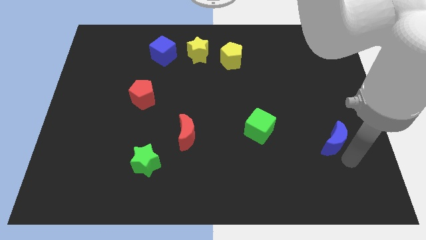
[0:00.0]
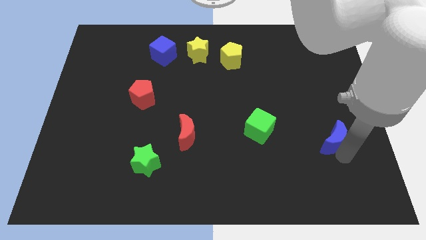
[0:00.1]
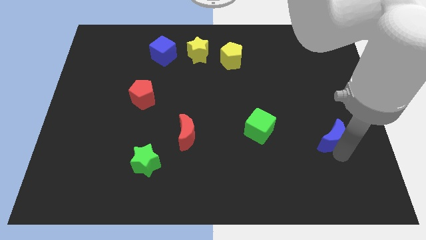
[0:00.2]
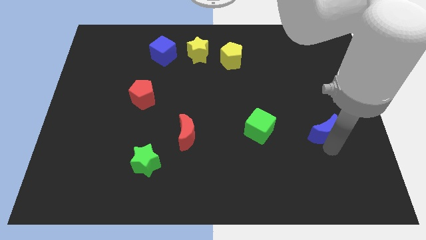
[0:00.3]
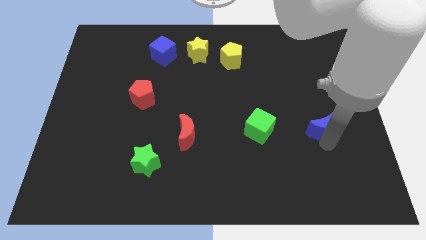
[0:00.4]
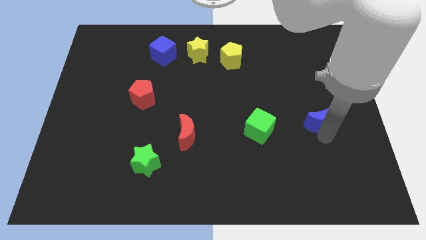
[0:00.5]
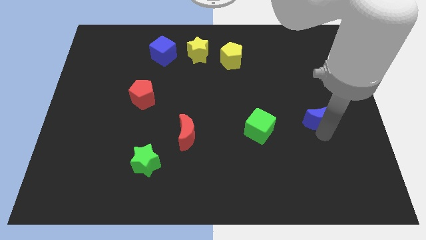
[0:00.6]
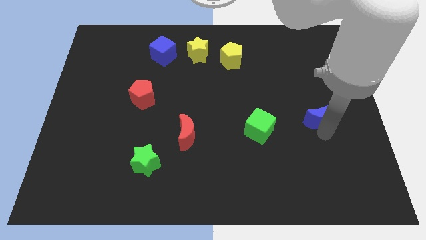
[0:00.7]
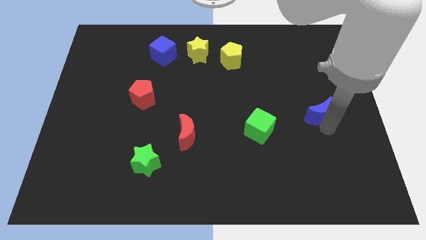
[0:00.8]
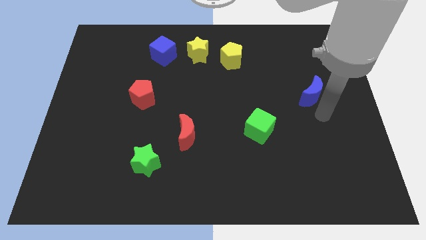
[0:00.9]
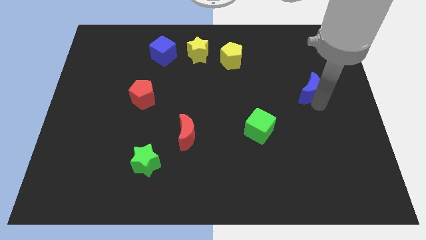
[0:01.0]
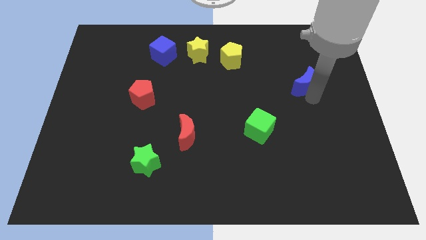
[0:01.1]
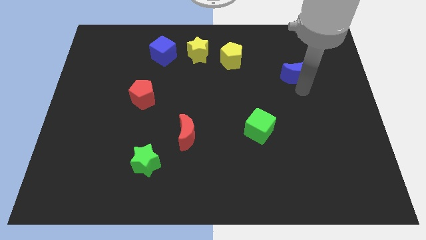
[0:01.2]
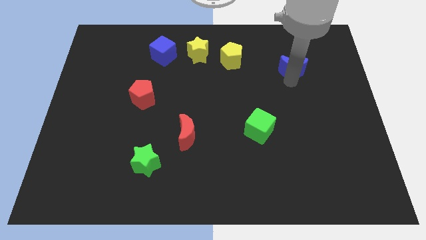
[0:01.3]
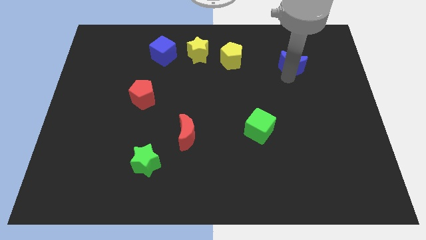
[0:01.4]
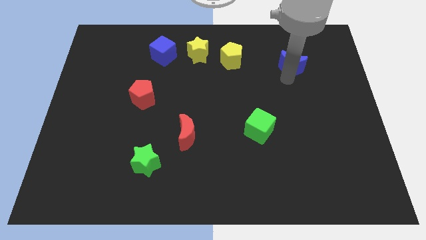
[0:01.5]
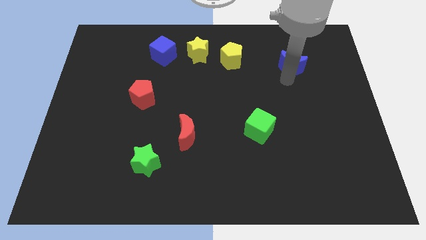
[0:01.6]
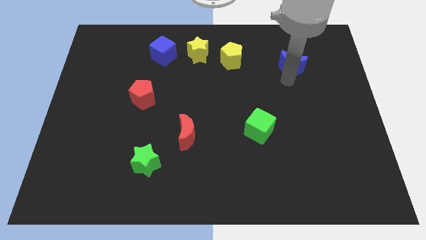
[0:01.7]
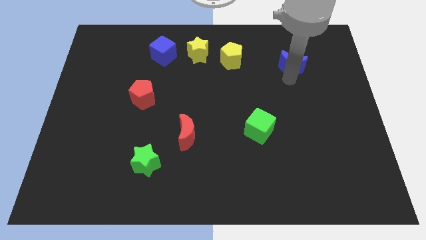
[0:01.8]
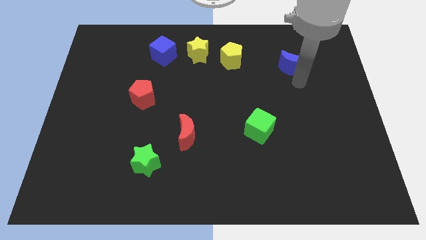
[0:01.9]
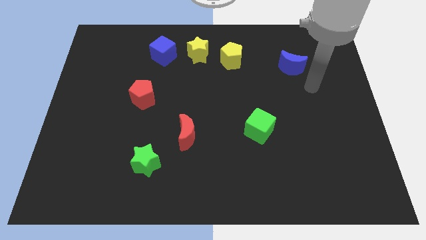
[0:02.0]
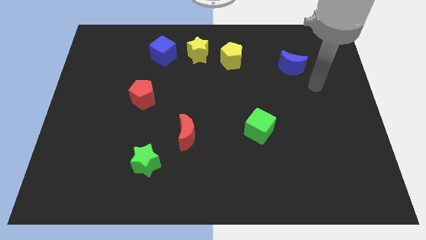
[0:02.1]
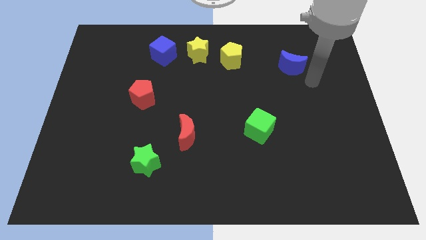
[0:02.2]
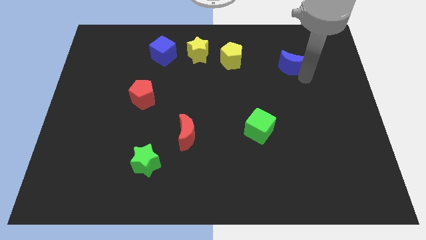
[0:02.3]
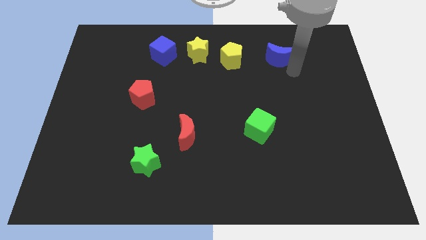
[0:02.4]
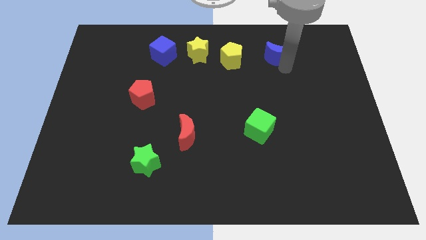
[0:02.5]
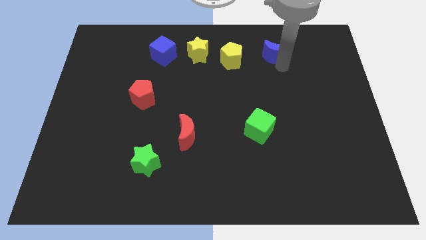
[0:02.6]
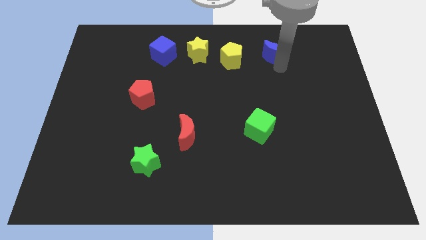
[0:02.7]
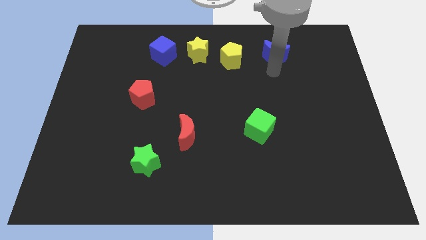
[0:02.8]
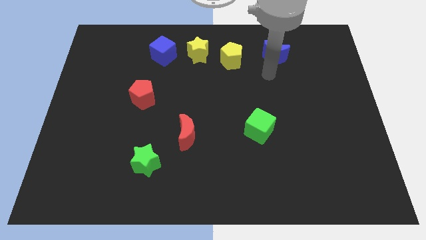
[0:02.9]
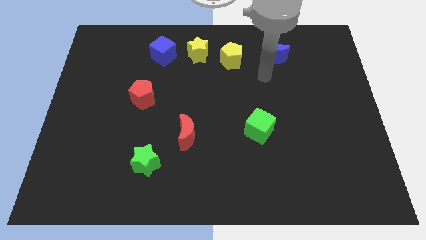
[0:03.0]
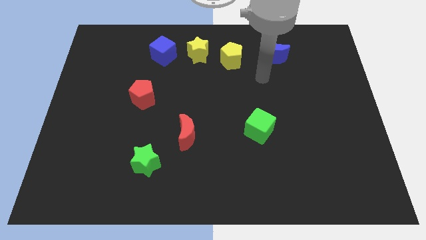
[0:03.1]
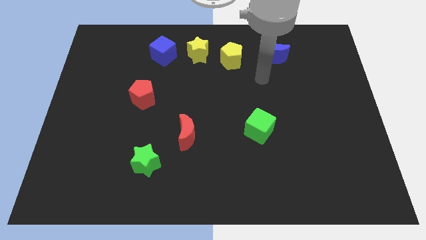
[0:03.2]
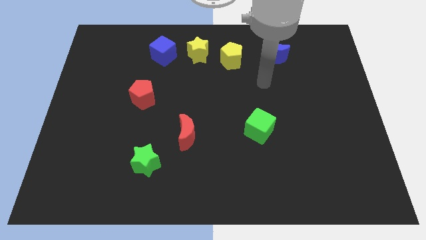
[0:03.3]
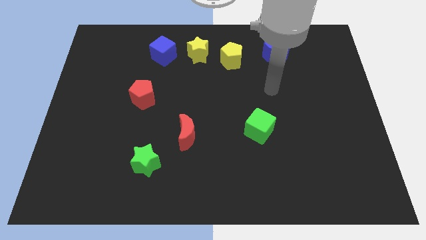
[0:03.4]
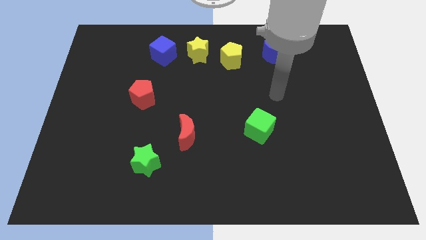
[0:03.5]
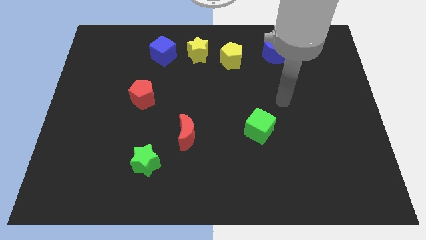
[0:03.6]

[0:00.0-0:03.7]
move the blue crescent to right of the yellow pentagon

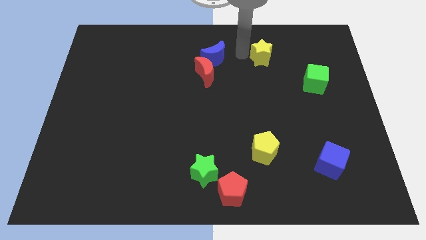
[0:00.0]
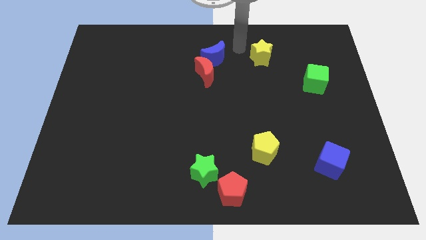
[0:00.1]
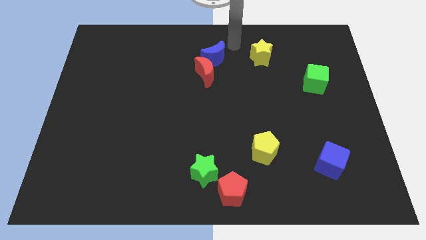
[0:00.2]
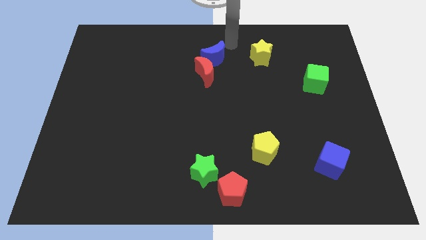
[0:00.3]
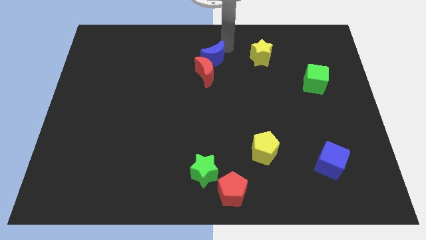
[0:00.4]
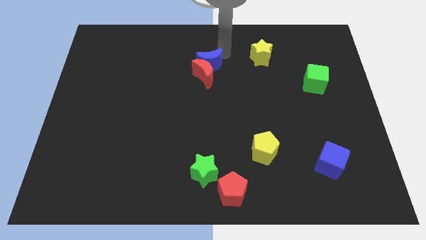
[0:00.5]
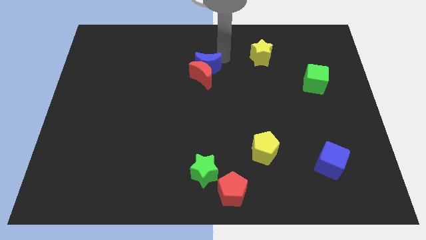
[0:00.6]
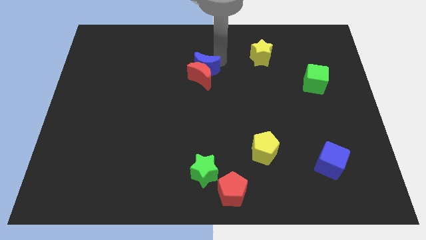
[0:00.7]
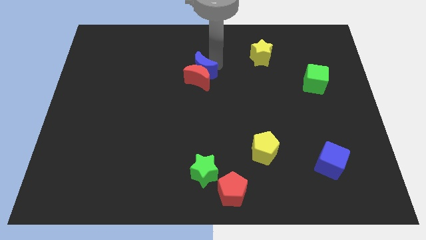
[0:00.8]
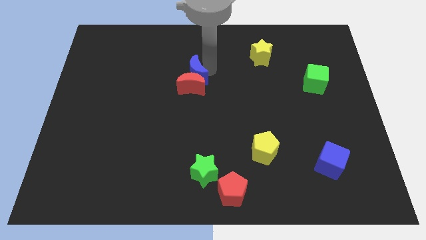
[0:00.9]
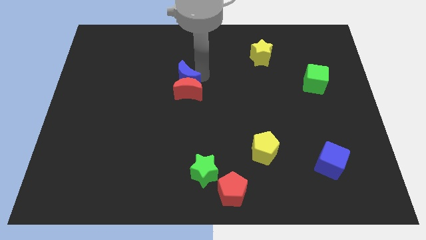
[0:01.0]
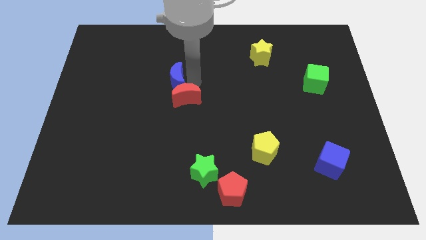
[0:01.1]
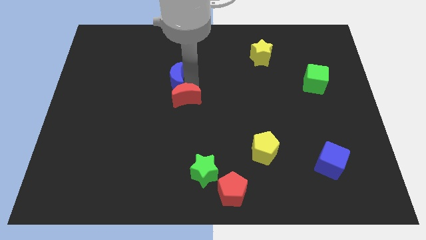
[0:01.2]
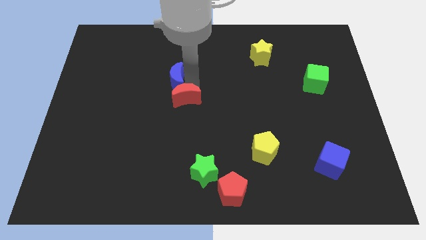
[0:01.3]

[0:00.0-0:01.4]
move the blue crescent along with red crescent towards the center of the board

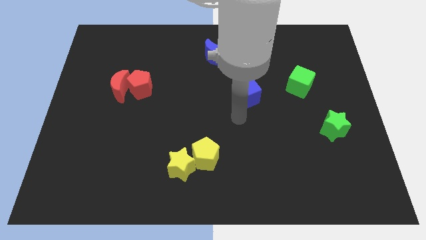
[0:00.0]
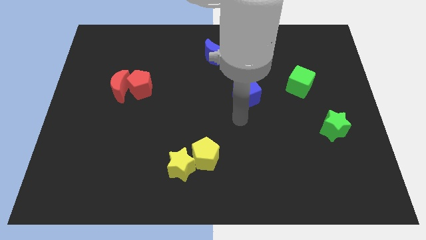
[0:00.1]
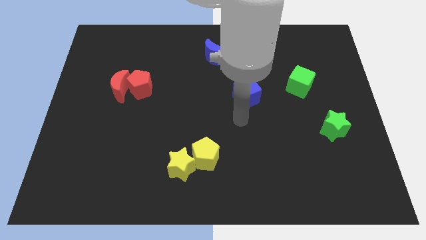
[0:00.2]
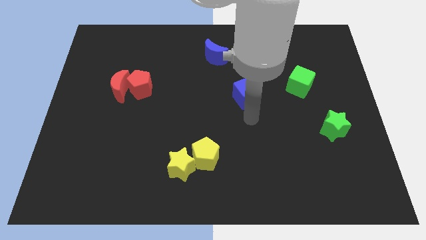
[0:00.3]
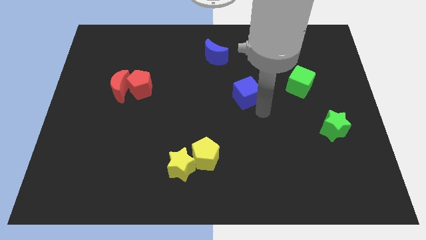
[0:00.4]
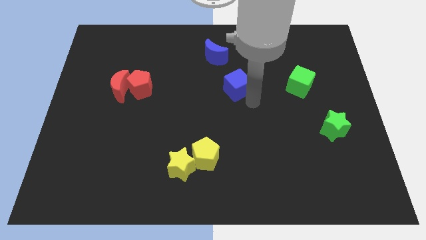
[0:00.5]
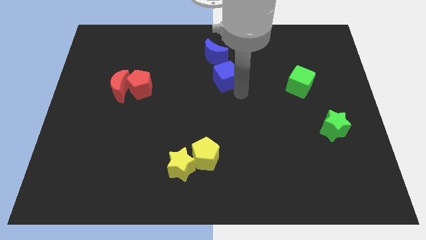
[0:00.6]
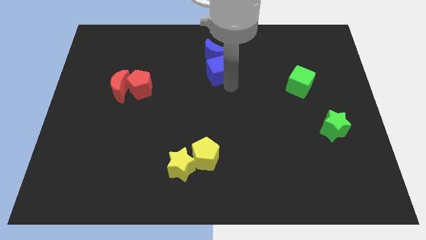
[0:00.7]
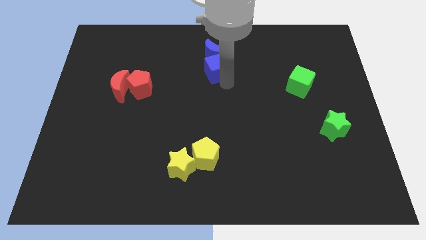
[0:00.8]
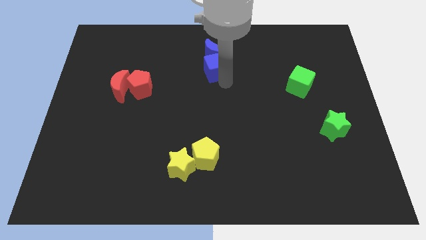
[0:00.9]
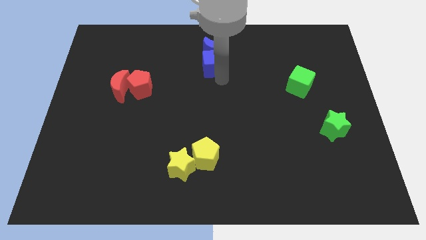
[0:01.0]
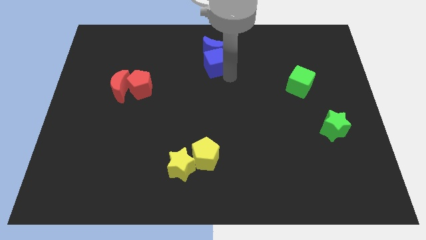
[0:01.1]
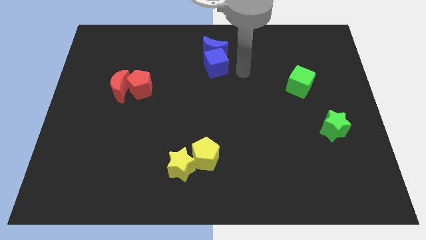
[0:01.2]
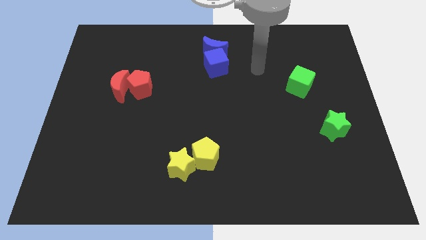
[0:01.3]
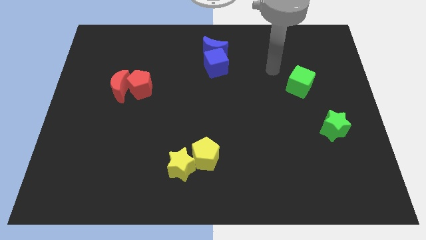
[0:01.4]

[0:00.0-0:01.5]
push the blue block into the blue crescent

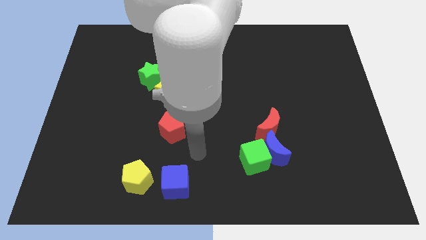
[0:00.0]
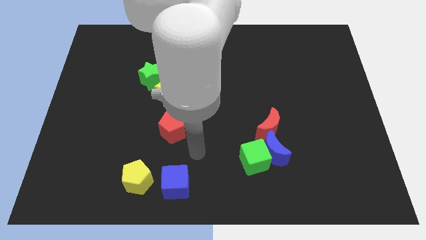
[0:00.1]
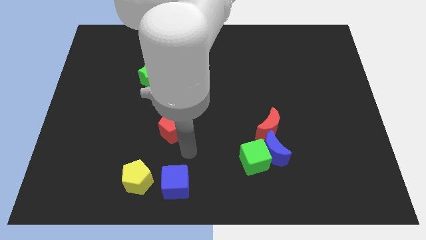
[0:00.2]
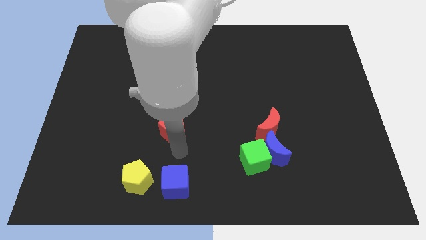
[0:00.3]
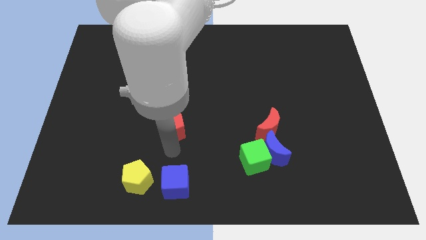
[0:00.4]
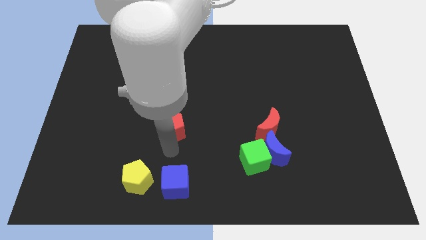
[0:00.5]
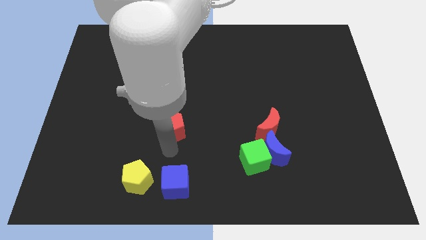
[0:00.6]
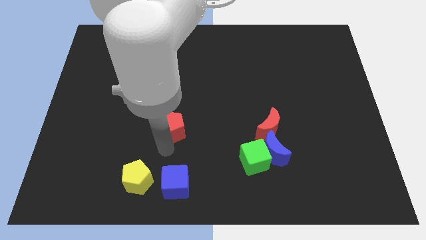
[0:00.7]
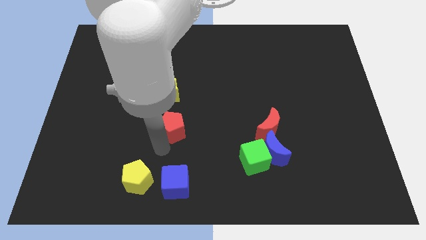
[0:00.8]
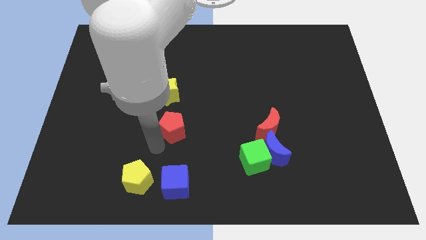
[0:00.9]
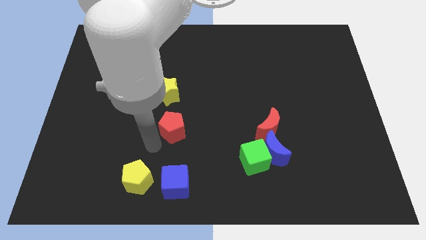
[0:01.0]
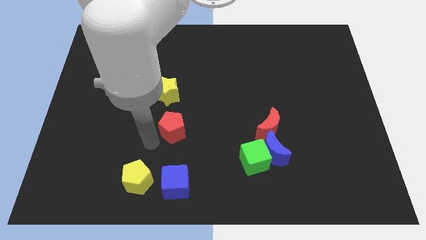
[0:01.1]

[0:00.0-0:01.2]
place the arm left side of the red pentagon

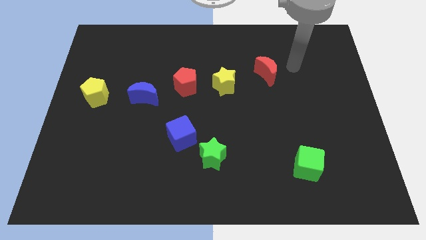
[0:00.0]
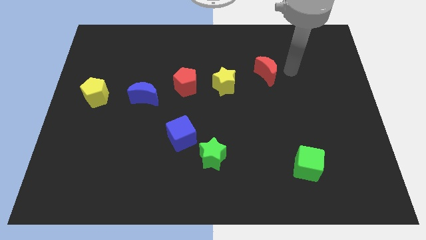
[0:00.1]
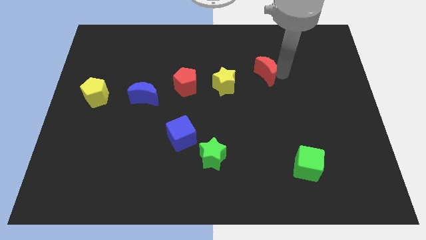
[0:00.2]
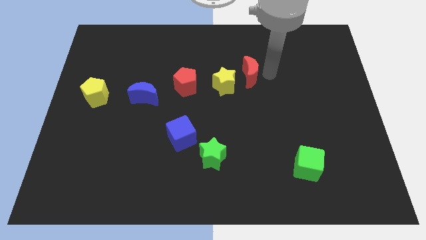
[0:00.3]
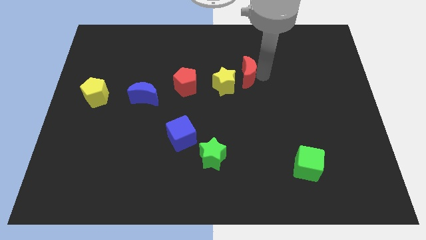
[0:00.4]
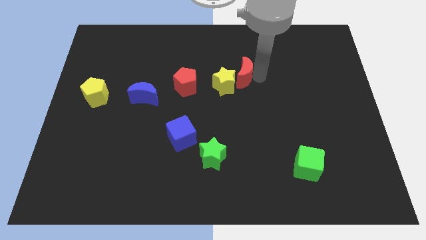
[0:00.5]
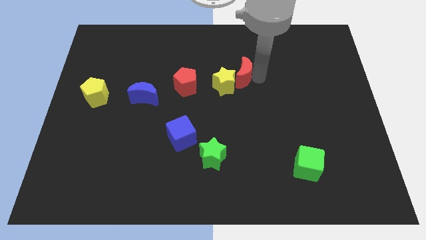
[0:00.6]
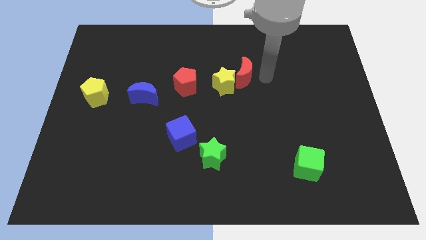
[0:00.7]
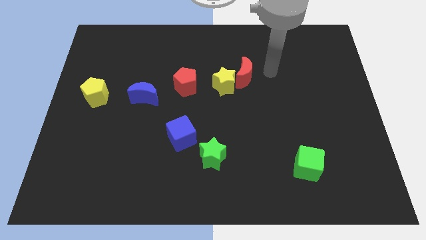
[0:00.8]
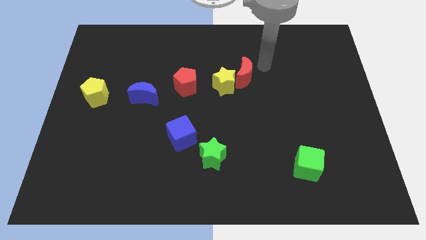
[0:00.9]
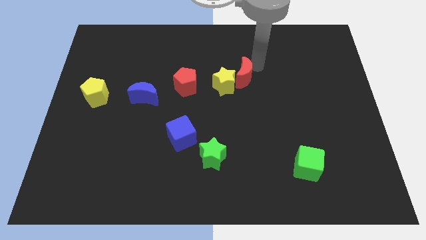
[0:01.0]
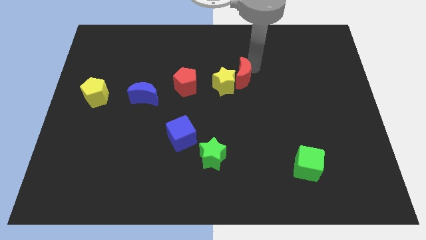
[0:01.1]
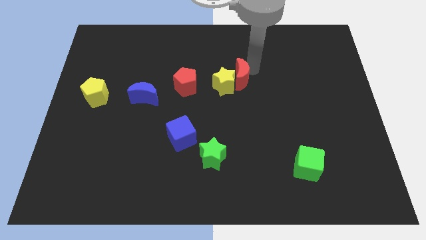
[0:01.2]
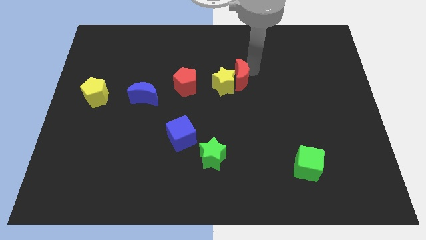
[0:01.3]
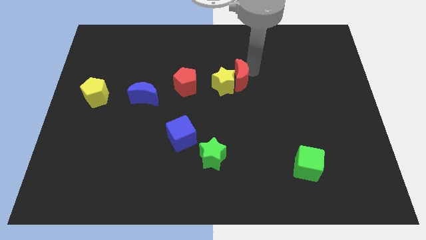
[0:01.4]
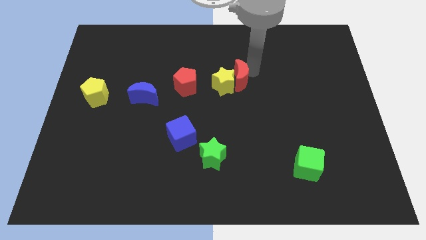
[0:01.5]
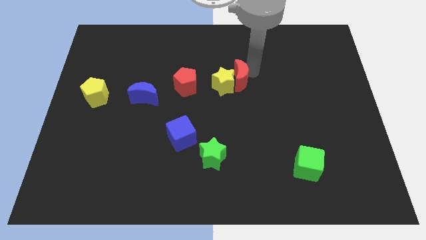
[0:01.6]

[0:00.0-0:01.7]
move the red crescent right to the yellow star
